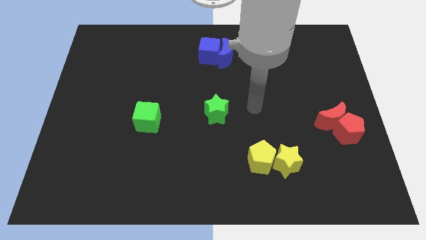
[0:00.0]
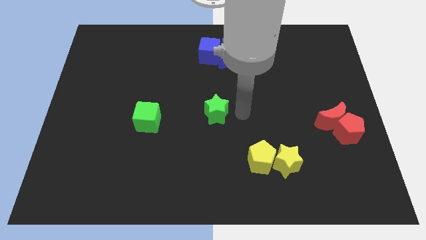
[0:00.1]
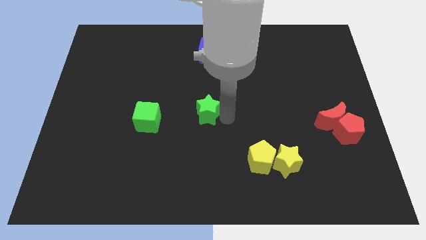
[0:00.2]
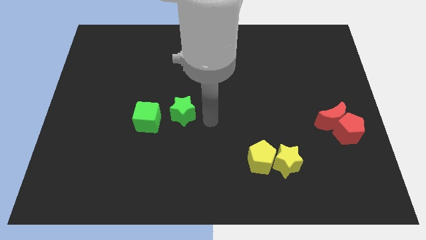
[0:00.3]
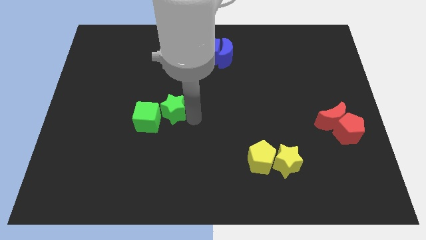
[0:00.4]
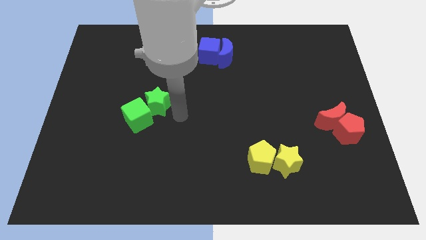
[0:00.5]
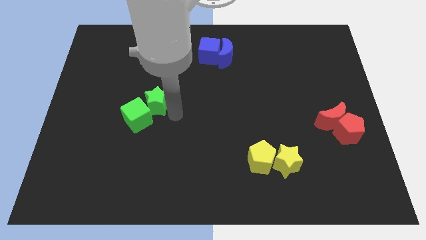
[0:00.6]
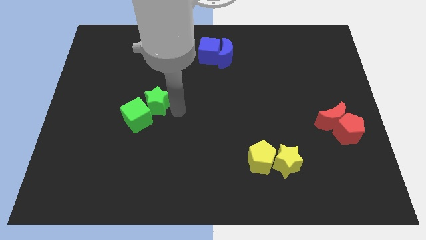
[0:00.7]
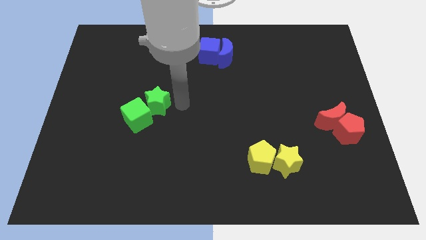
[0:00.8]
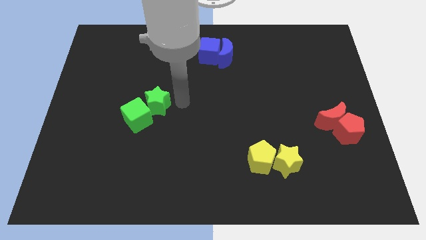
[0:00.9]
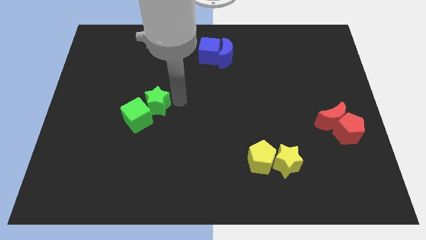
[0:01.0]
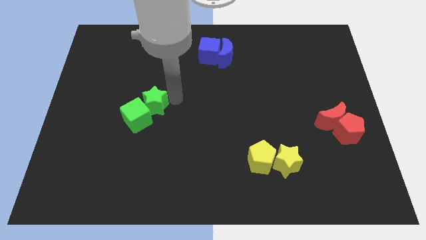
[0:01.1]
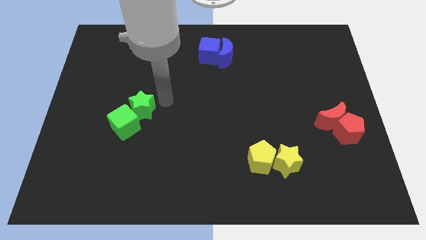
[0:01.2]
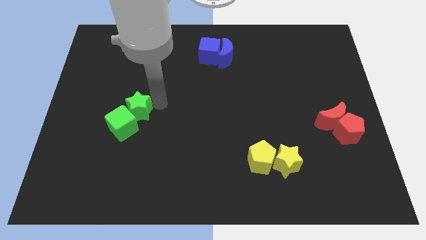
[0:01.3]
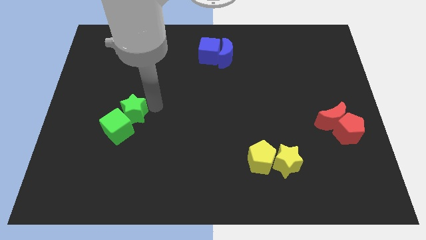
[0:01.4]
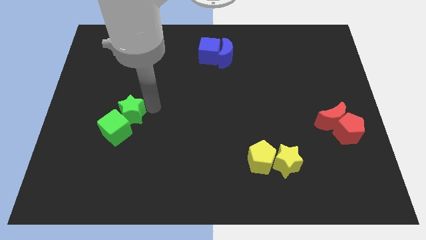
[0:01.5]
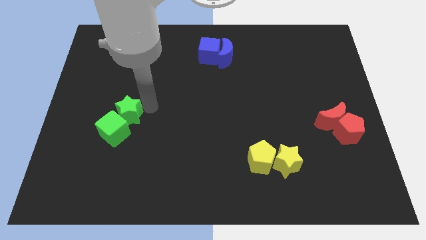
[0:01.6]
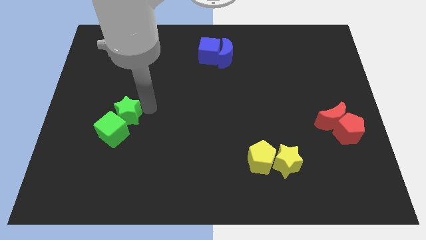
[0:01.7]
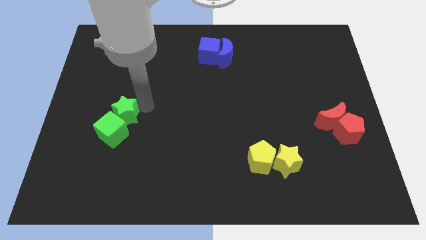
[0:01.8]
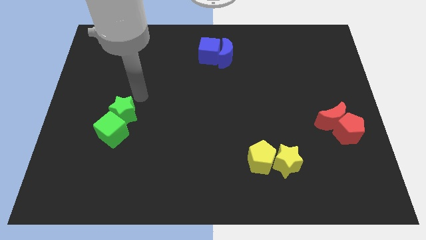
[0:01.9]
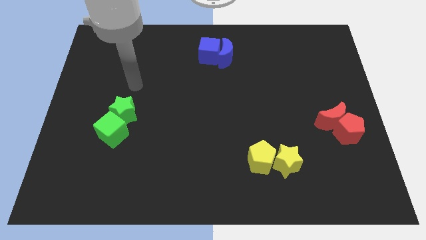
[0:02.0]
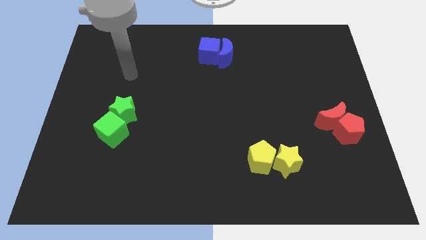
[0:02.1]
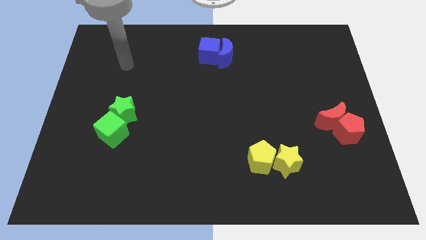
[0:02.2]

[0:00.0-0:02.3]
push the green star into the green cube

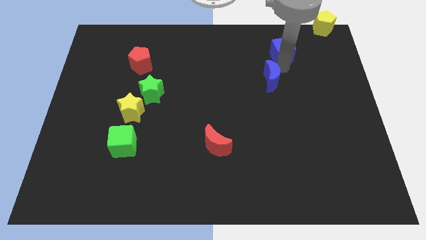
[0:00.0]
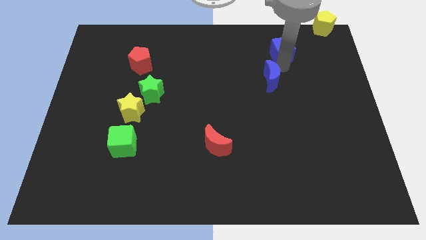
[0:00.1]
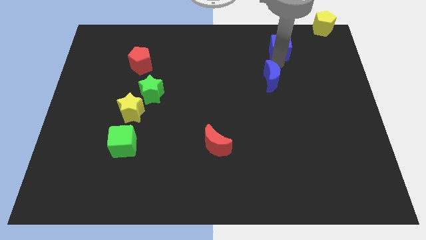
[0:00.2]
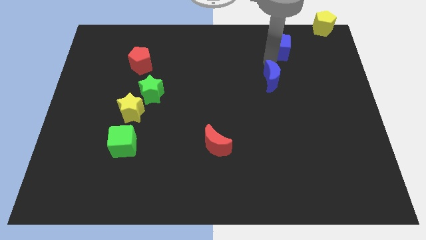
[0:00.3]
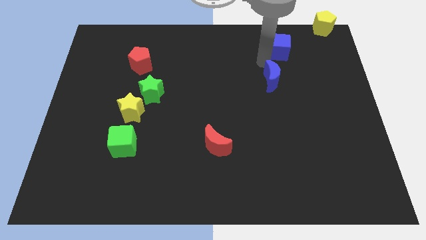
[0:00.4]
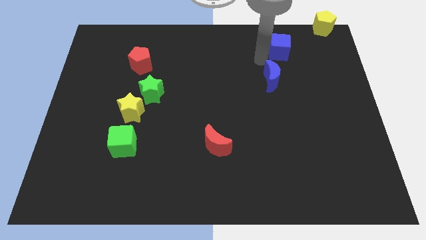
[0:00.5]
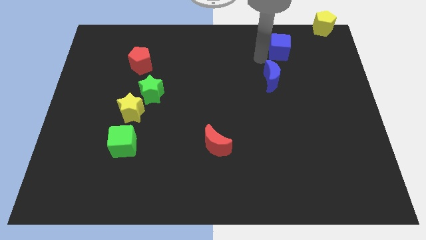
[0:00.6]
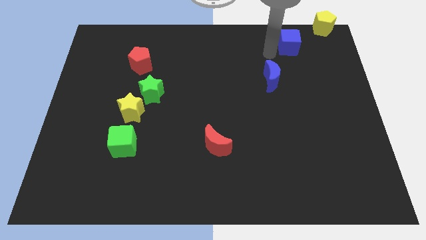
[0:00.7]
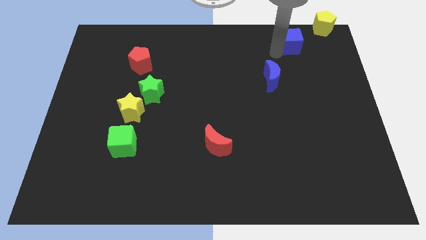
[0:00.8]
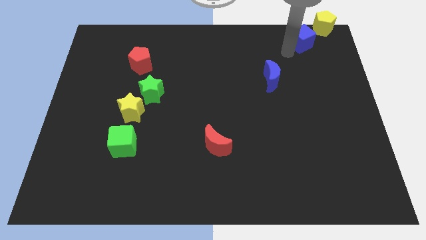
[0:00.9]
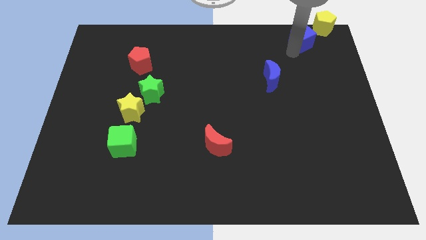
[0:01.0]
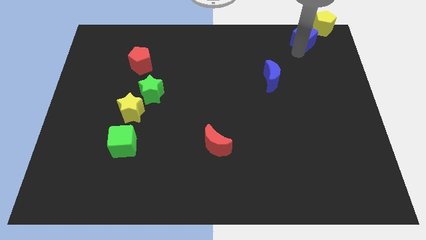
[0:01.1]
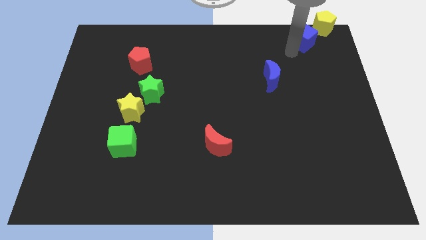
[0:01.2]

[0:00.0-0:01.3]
place the blue cube into the yellow pentagon

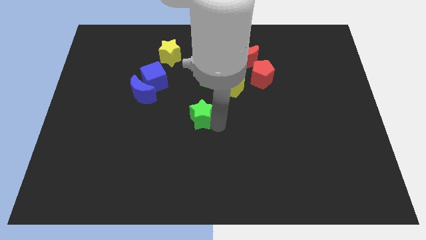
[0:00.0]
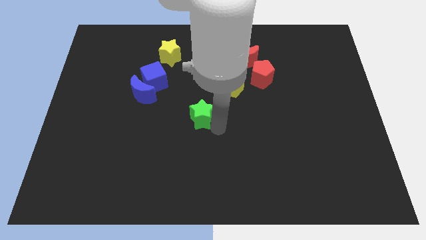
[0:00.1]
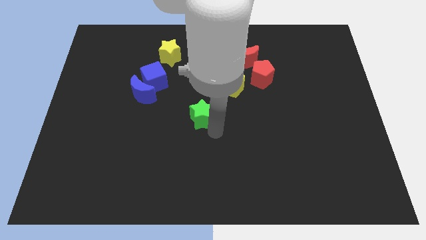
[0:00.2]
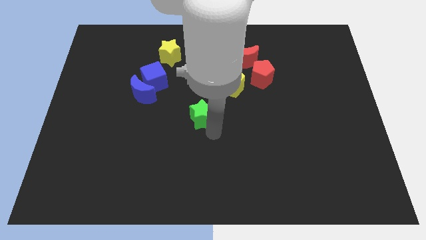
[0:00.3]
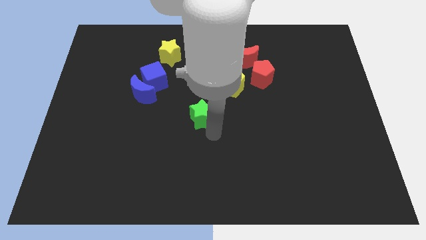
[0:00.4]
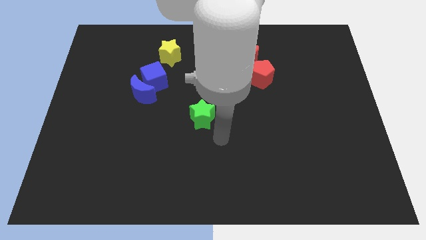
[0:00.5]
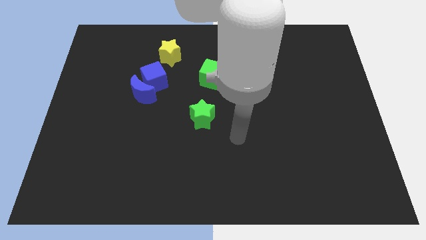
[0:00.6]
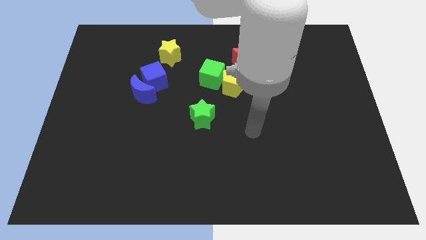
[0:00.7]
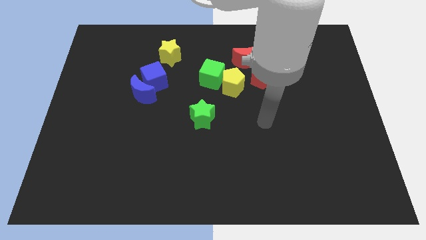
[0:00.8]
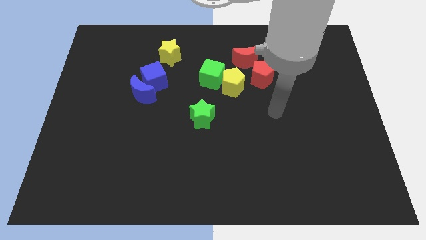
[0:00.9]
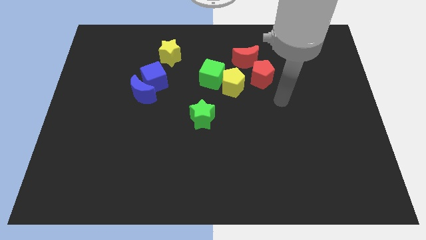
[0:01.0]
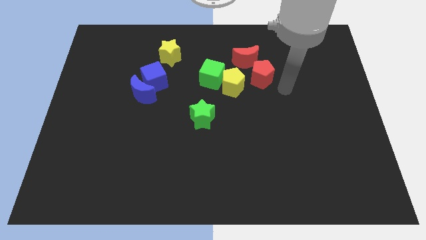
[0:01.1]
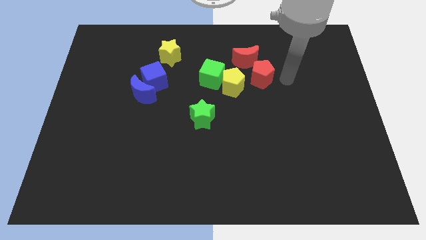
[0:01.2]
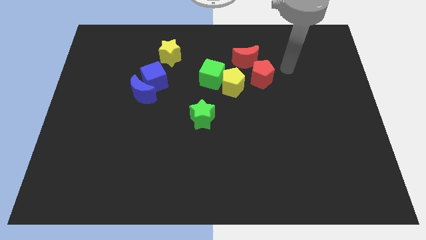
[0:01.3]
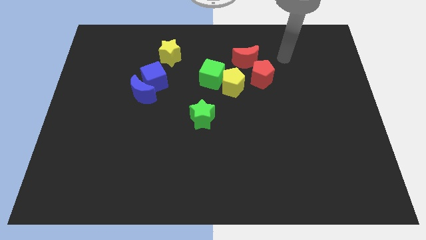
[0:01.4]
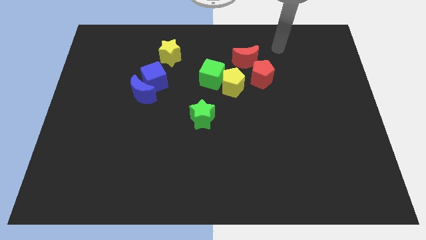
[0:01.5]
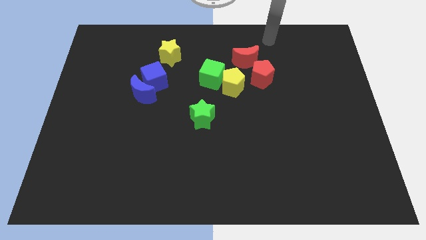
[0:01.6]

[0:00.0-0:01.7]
move the arm away from green star

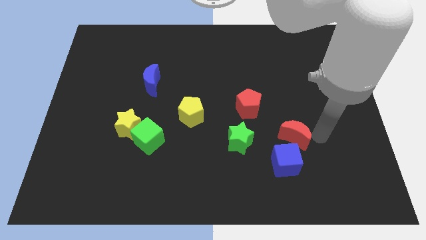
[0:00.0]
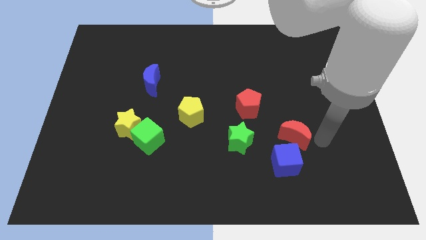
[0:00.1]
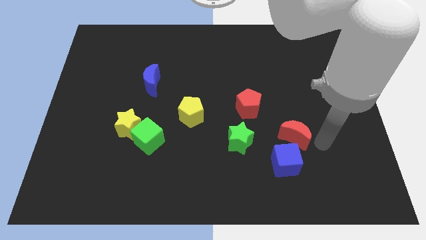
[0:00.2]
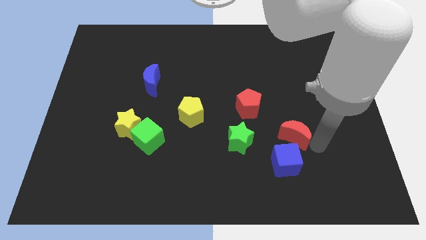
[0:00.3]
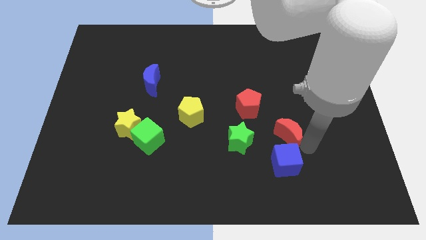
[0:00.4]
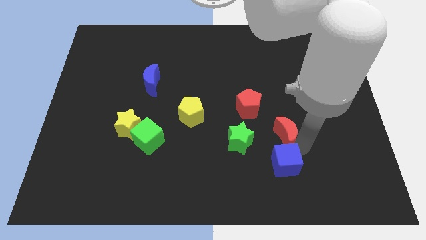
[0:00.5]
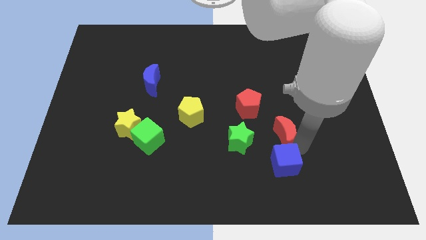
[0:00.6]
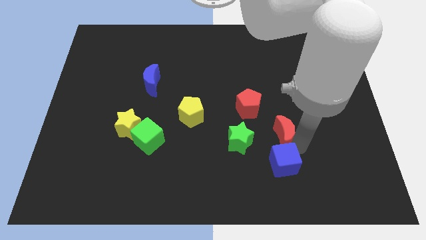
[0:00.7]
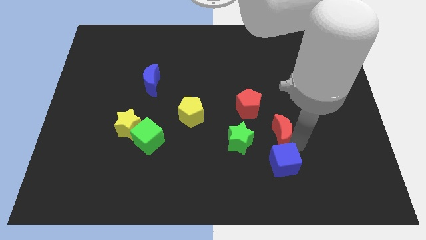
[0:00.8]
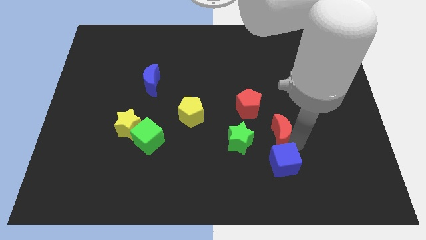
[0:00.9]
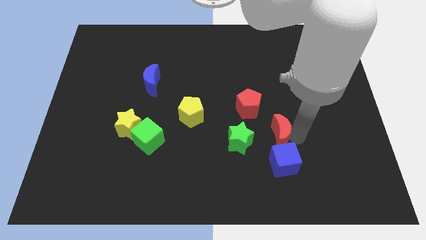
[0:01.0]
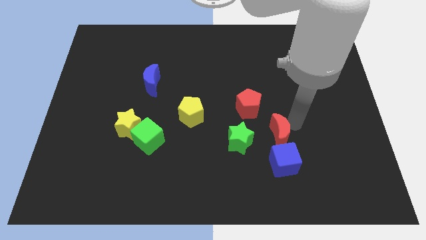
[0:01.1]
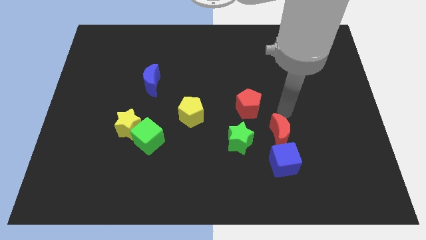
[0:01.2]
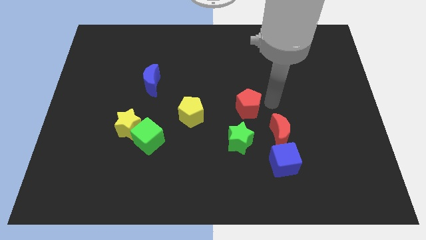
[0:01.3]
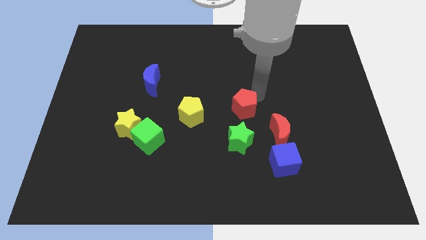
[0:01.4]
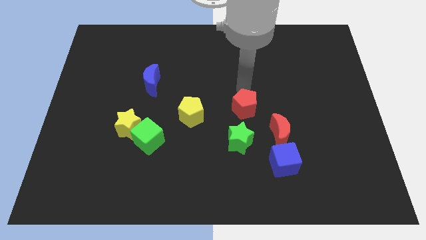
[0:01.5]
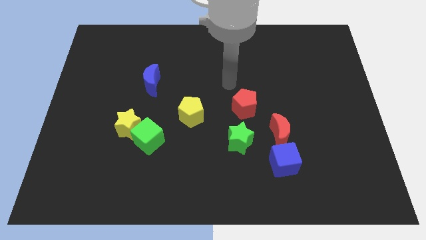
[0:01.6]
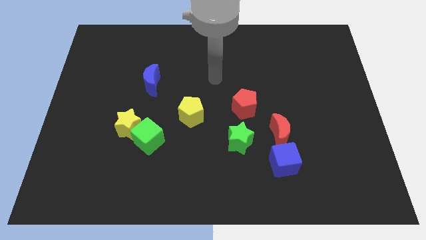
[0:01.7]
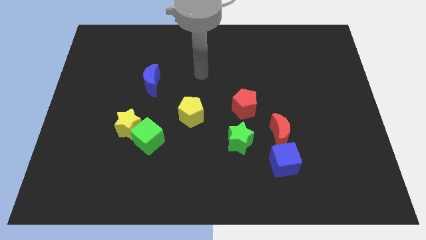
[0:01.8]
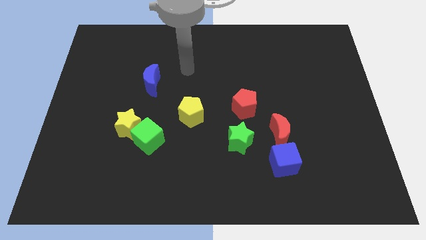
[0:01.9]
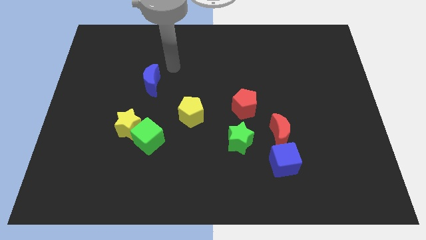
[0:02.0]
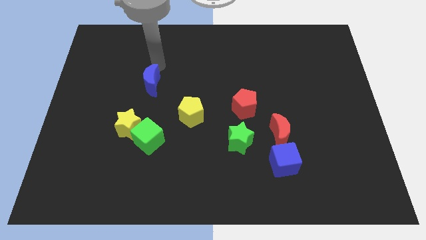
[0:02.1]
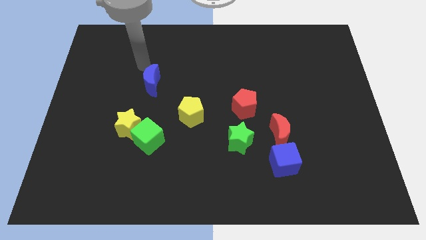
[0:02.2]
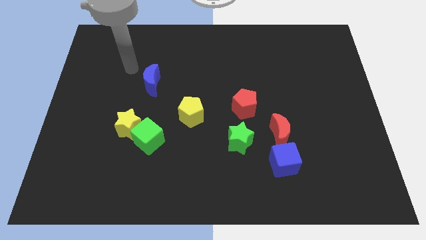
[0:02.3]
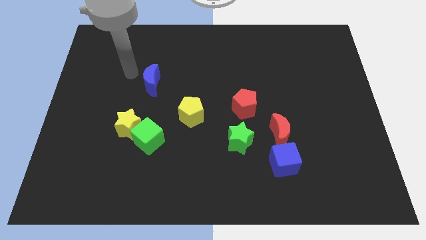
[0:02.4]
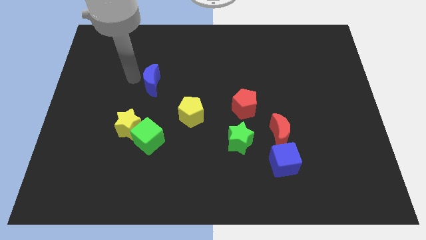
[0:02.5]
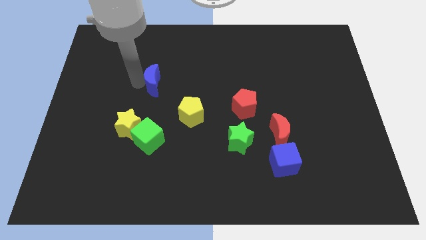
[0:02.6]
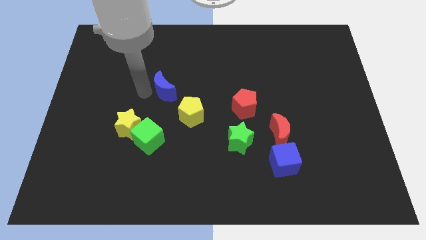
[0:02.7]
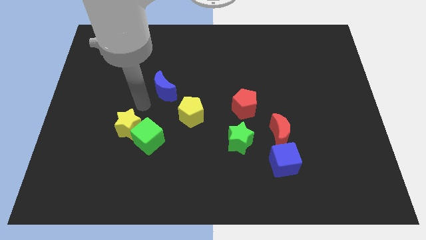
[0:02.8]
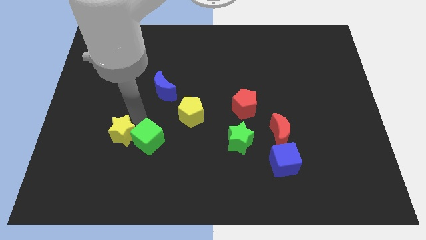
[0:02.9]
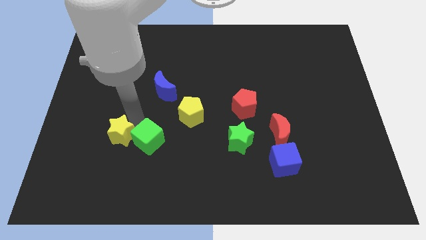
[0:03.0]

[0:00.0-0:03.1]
place the blue moon diagonal to the yellow pentagon

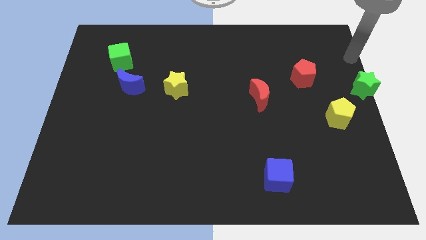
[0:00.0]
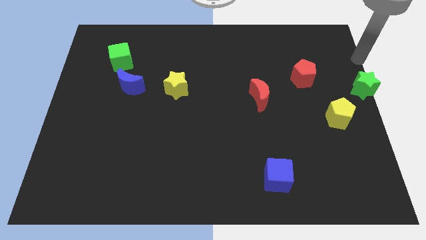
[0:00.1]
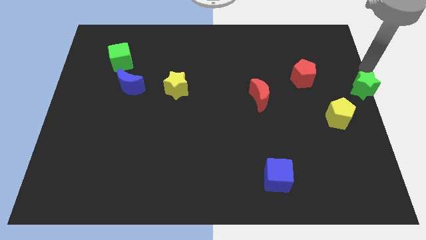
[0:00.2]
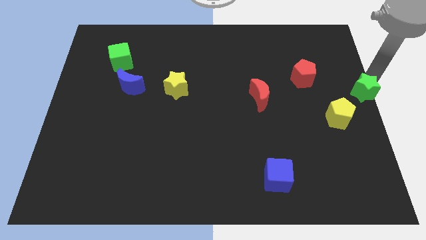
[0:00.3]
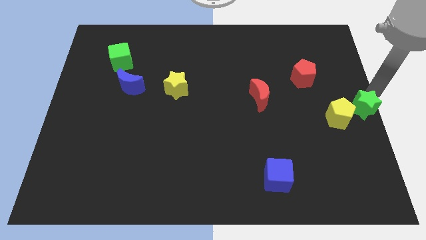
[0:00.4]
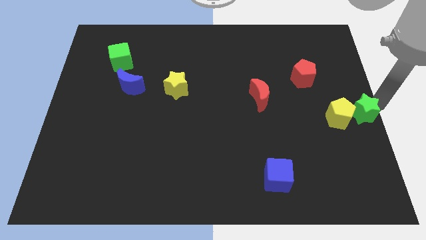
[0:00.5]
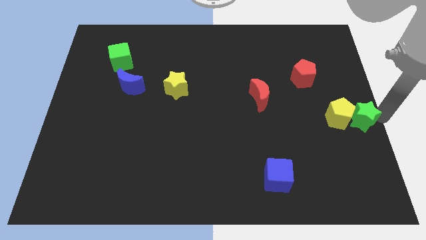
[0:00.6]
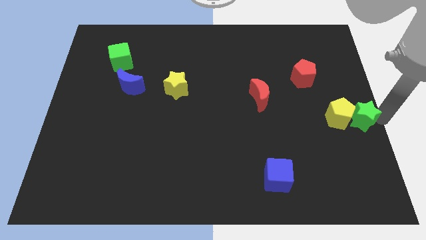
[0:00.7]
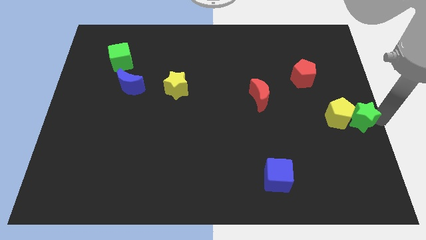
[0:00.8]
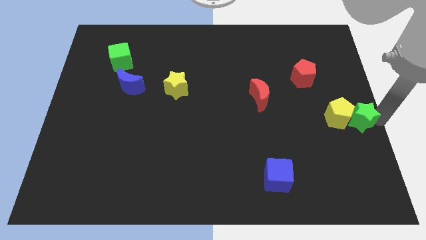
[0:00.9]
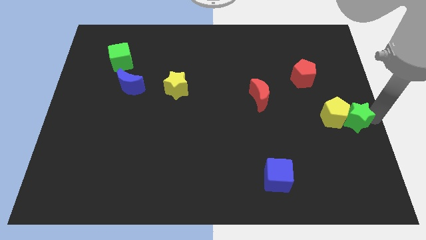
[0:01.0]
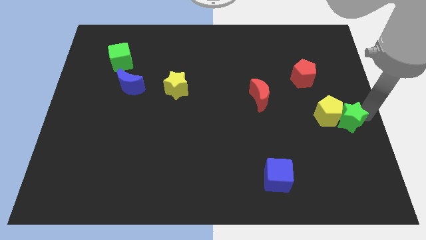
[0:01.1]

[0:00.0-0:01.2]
push the green star into the yellow pentagon
